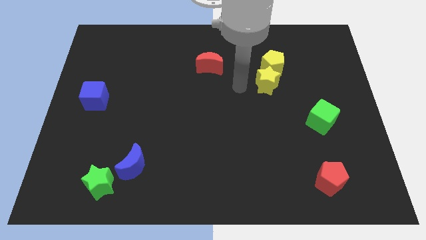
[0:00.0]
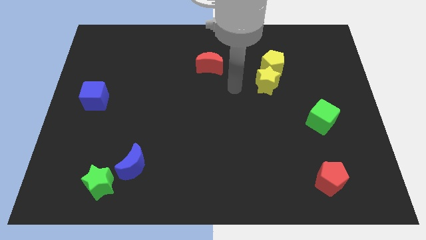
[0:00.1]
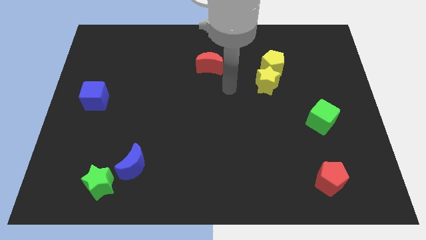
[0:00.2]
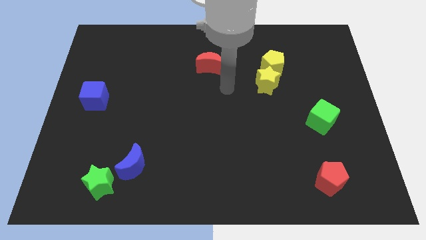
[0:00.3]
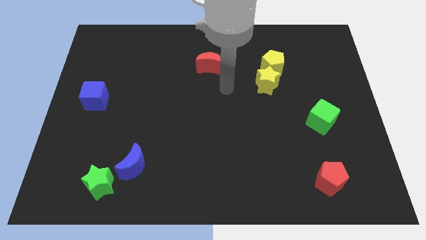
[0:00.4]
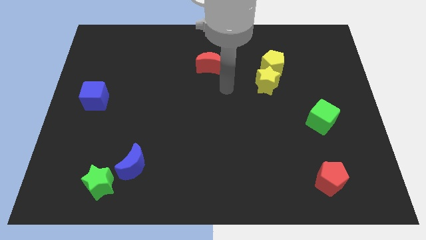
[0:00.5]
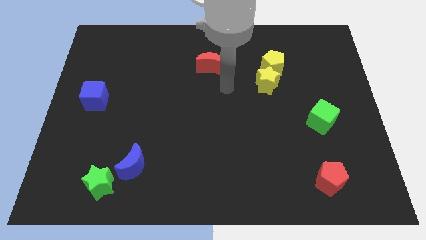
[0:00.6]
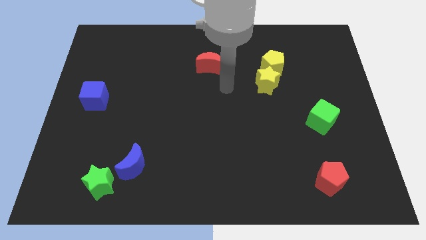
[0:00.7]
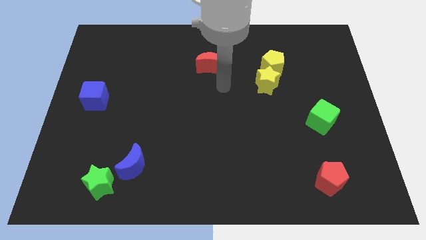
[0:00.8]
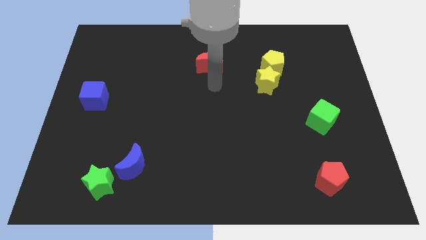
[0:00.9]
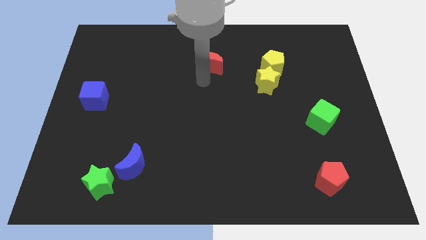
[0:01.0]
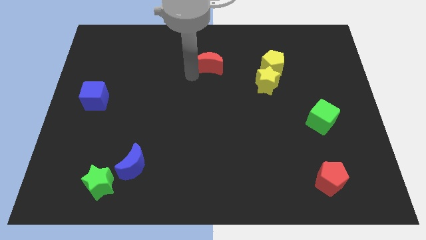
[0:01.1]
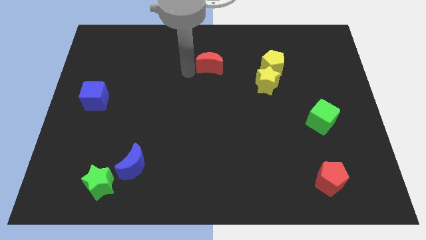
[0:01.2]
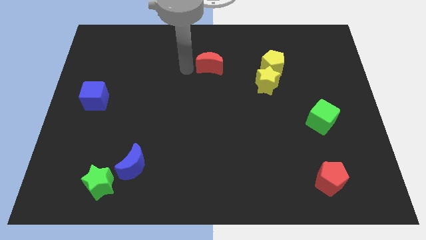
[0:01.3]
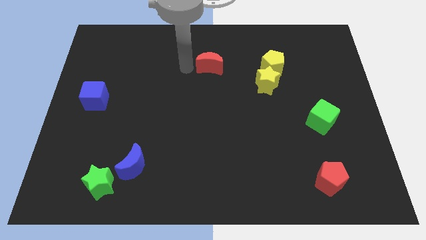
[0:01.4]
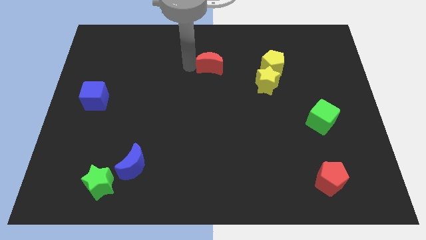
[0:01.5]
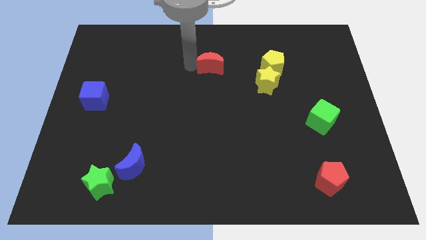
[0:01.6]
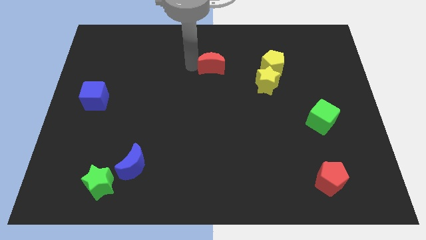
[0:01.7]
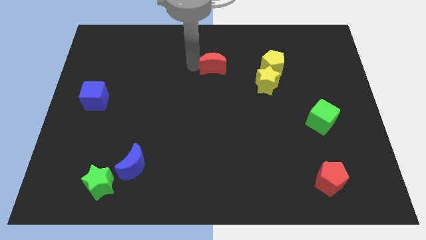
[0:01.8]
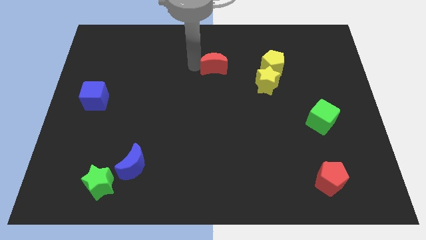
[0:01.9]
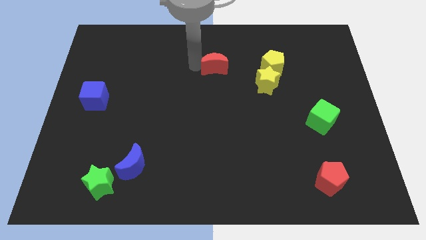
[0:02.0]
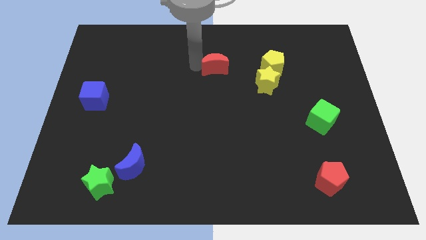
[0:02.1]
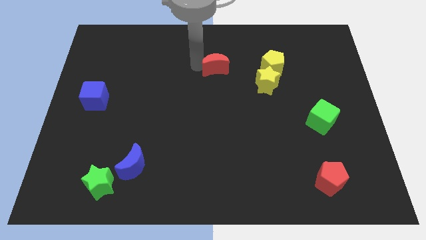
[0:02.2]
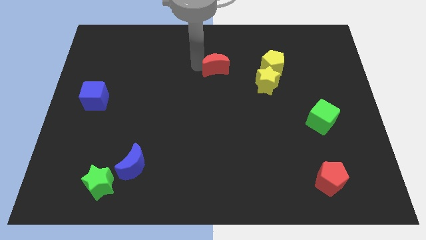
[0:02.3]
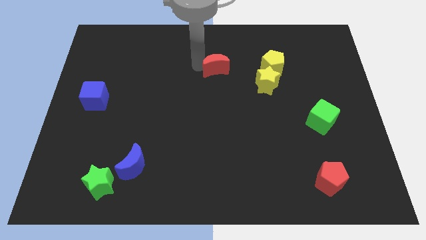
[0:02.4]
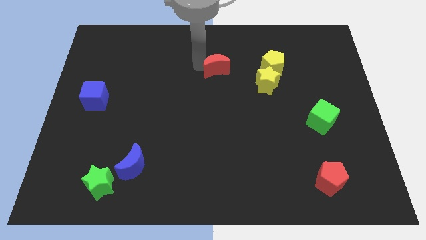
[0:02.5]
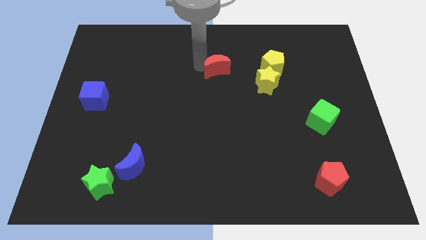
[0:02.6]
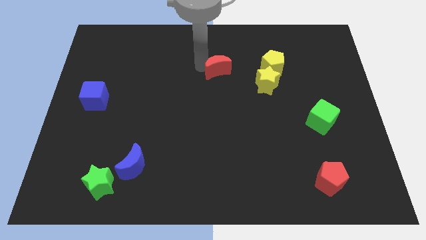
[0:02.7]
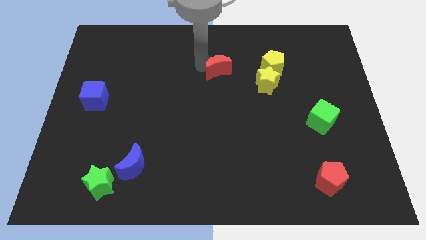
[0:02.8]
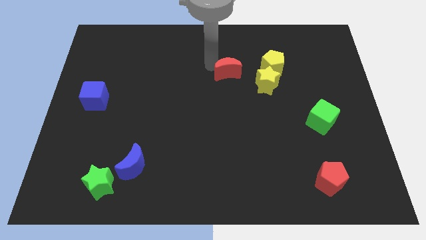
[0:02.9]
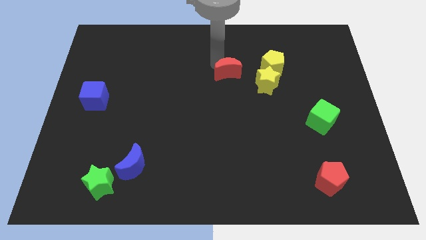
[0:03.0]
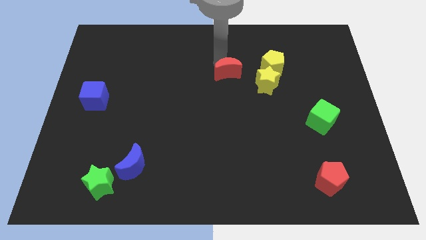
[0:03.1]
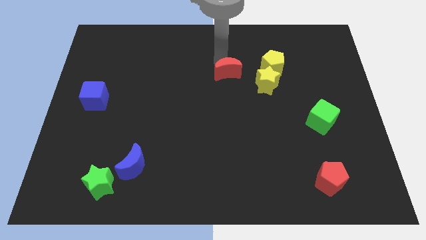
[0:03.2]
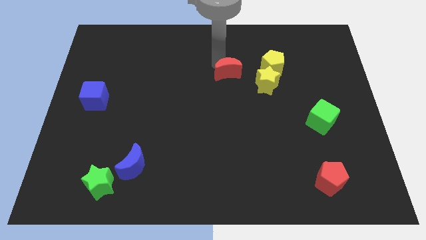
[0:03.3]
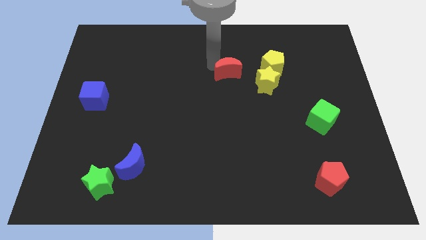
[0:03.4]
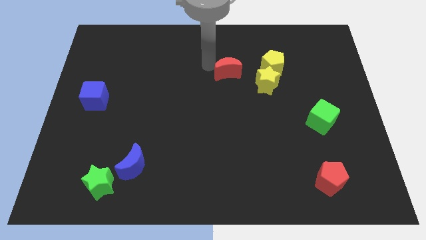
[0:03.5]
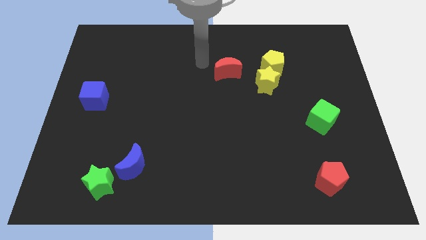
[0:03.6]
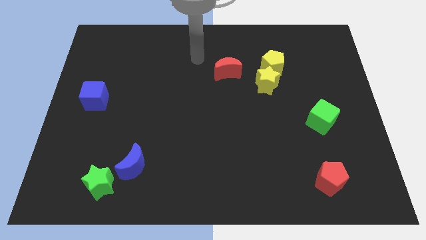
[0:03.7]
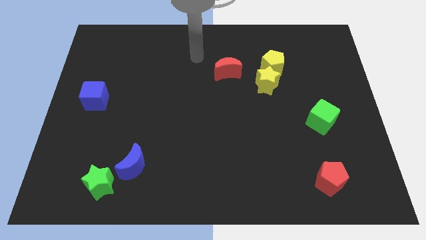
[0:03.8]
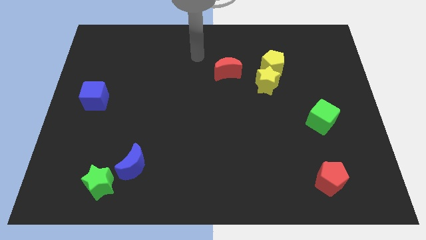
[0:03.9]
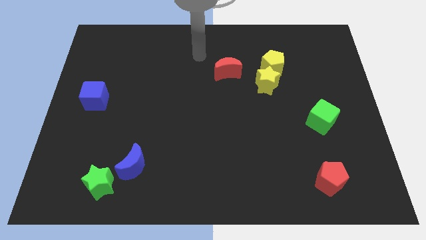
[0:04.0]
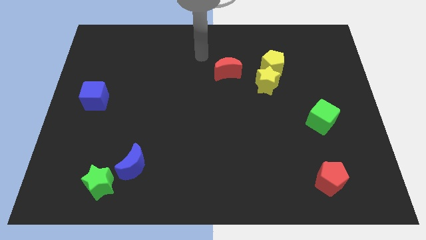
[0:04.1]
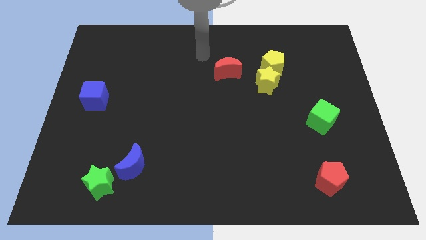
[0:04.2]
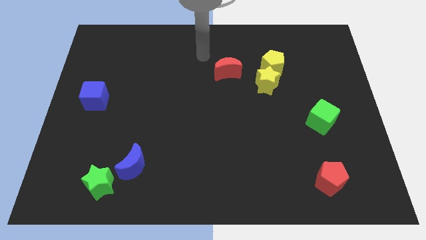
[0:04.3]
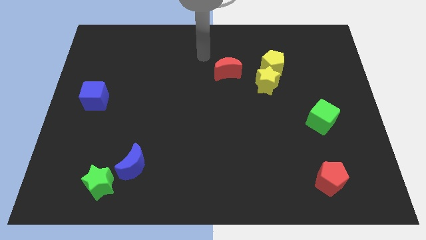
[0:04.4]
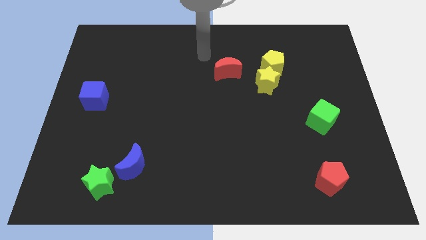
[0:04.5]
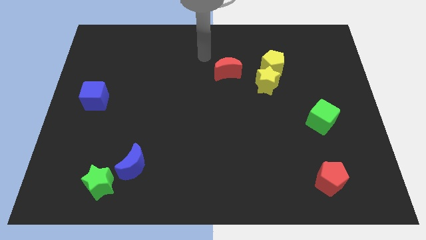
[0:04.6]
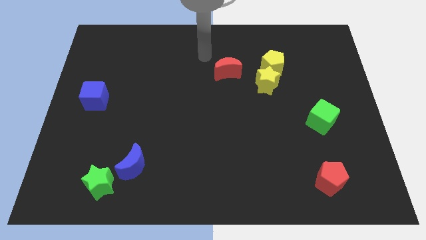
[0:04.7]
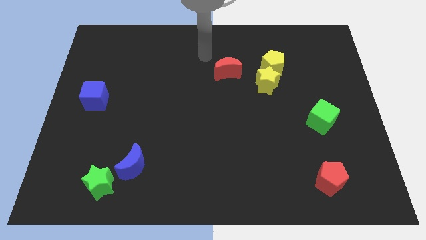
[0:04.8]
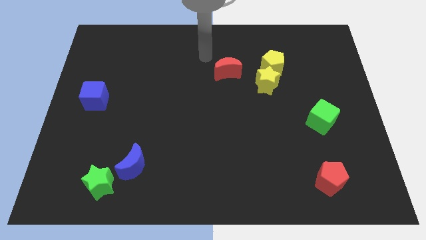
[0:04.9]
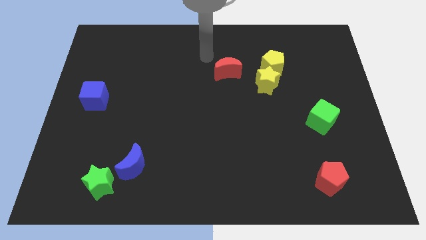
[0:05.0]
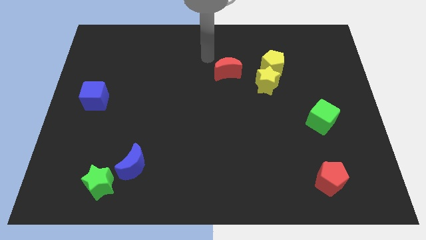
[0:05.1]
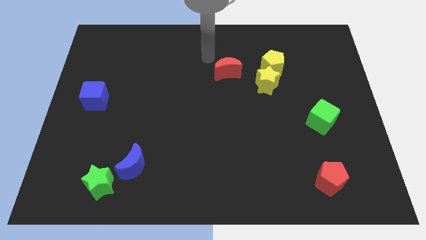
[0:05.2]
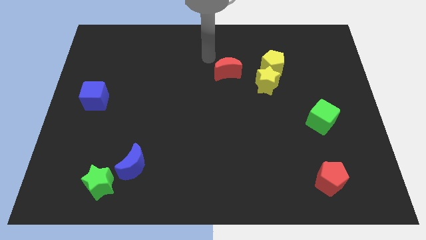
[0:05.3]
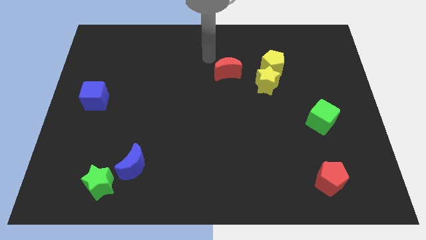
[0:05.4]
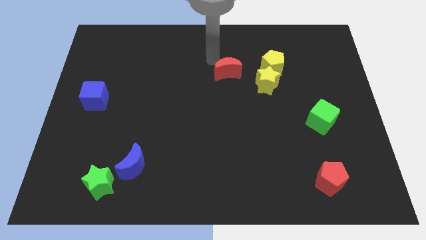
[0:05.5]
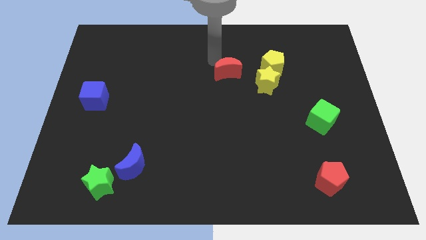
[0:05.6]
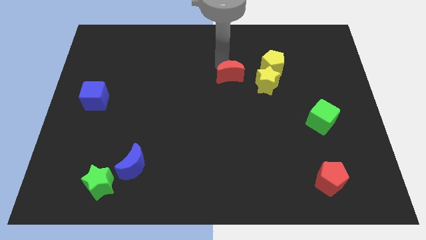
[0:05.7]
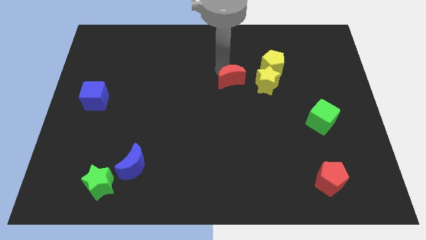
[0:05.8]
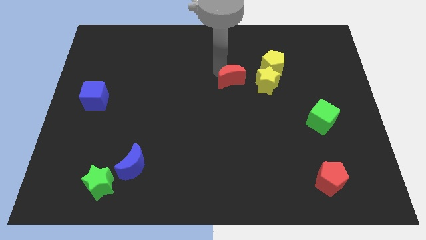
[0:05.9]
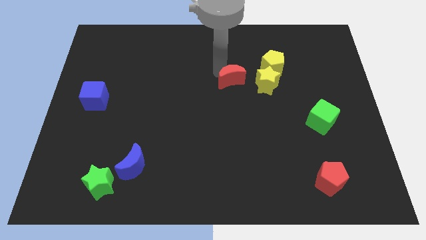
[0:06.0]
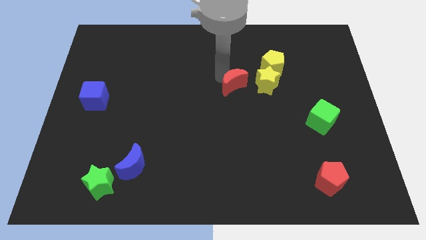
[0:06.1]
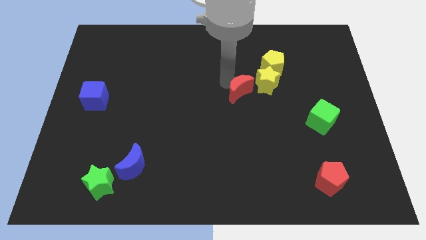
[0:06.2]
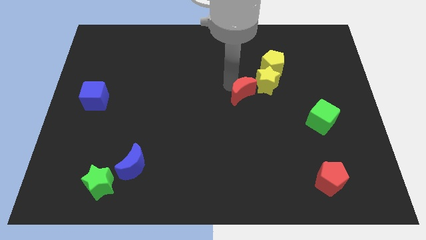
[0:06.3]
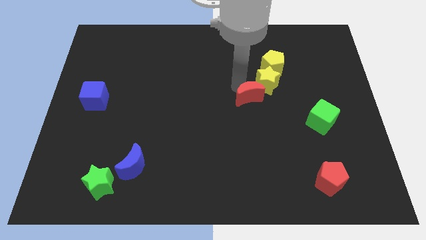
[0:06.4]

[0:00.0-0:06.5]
move the red crescent to the left bottom side of the yellow star

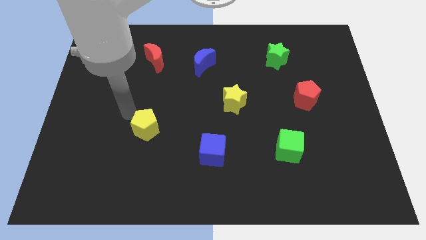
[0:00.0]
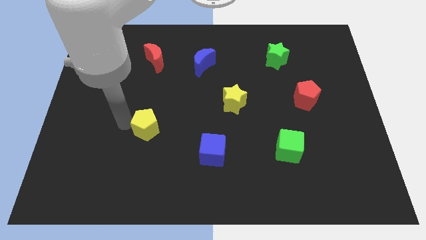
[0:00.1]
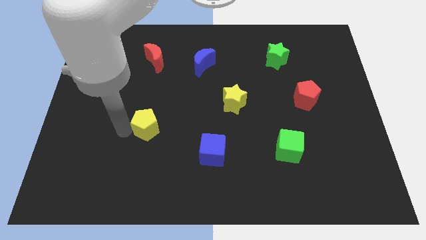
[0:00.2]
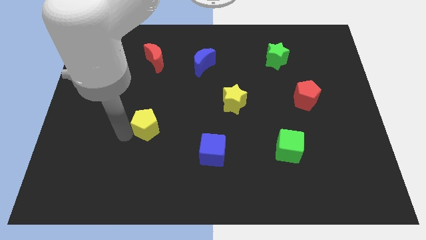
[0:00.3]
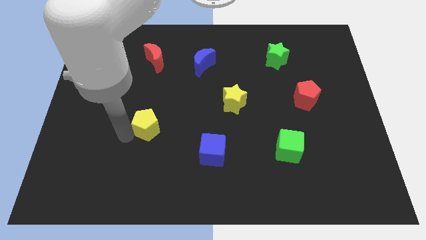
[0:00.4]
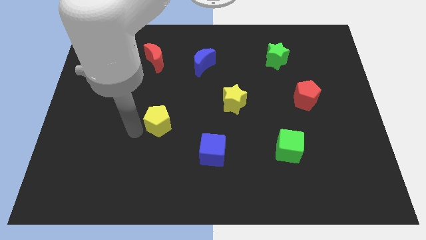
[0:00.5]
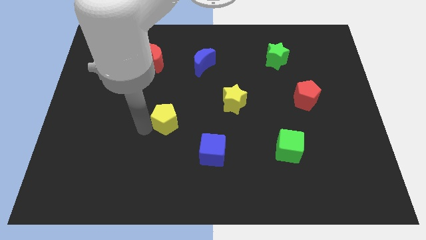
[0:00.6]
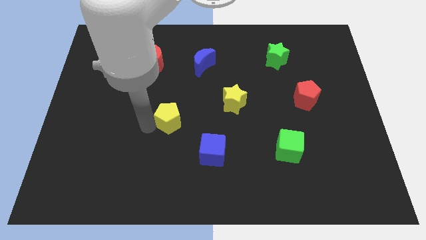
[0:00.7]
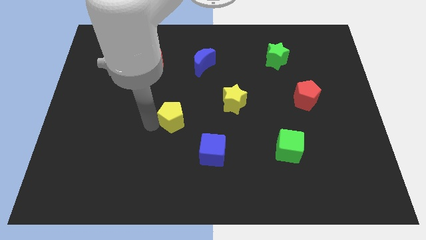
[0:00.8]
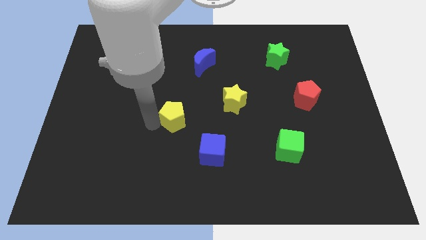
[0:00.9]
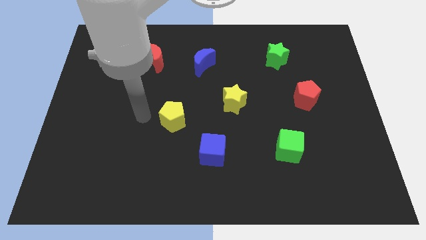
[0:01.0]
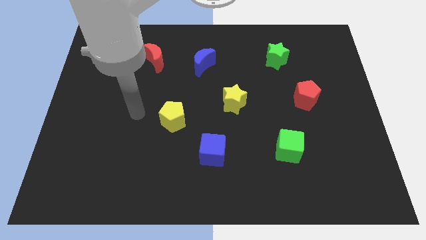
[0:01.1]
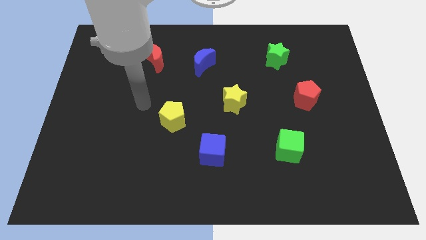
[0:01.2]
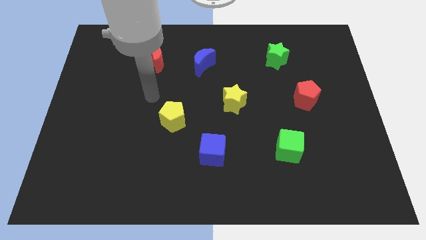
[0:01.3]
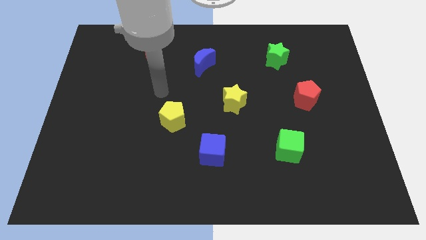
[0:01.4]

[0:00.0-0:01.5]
push the yellow pentagon to the right of the board

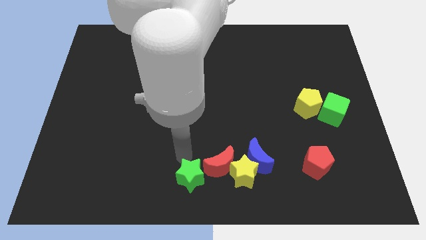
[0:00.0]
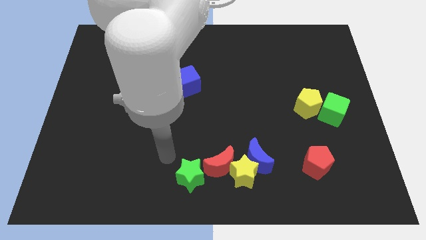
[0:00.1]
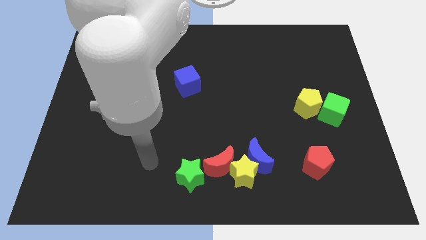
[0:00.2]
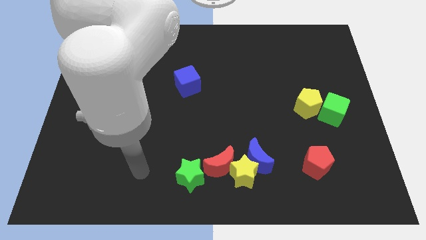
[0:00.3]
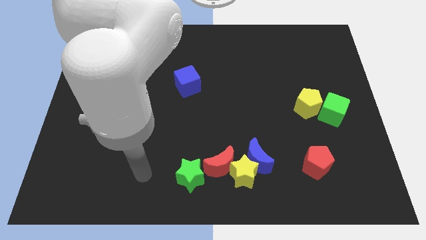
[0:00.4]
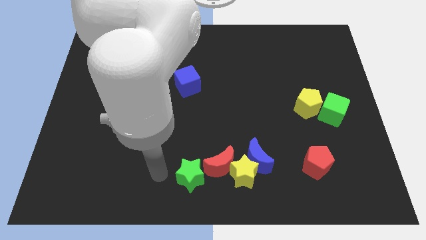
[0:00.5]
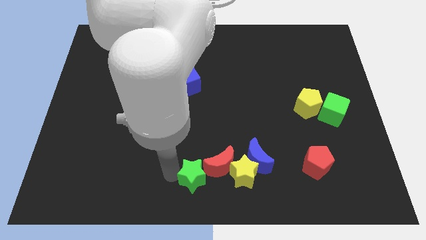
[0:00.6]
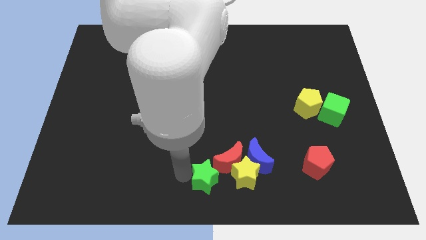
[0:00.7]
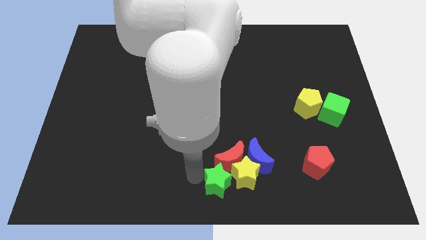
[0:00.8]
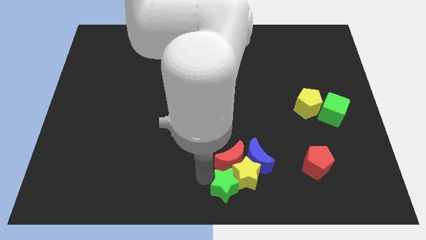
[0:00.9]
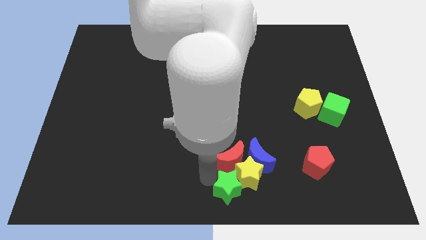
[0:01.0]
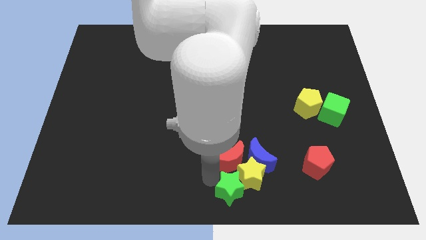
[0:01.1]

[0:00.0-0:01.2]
push the green star into the red moon
